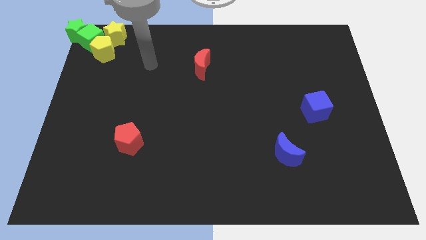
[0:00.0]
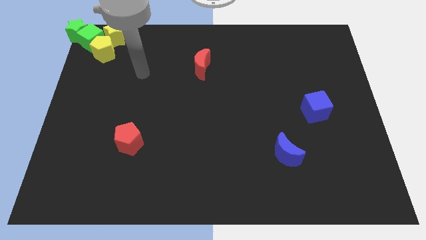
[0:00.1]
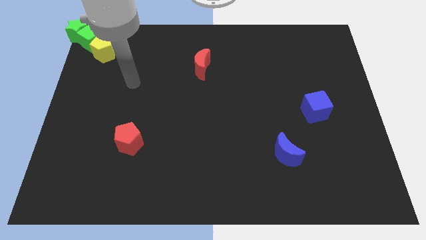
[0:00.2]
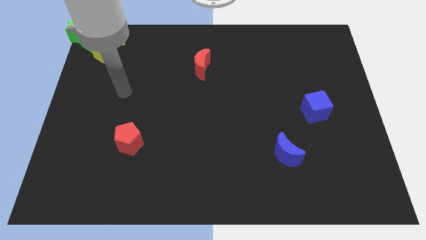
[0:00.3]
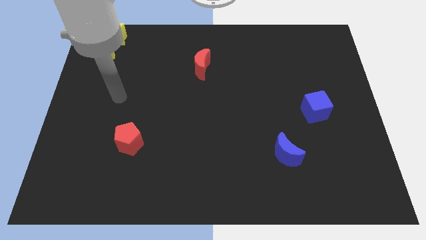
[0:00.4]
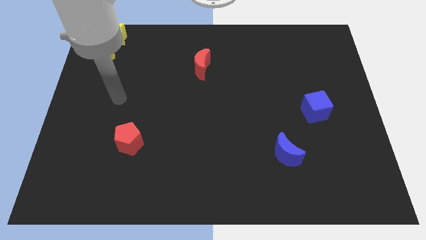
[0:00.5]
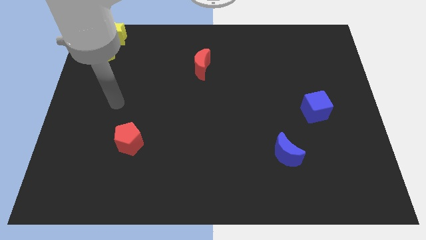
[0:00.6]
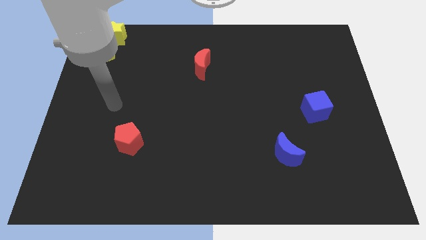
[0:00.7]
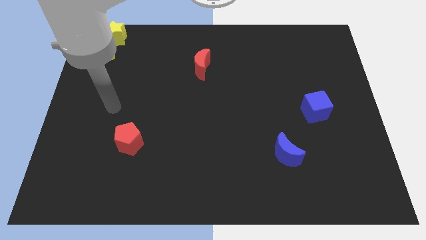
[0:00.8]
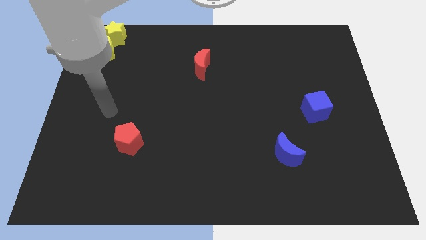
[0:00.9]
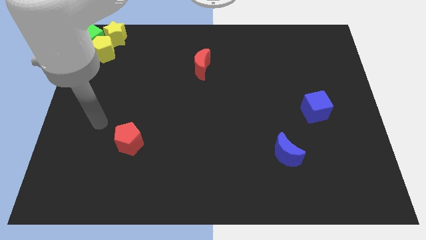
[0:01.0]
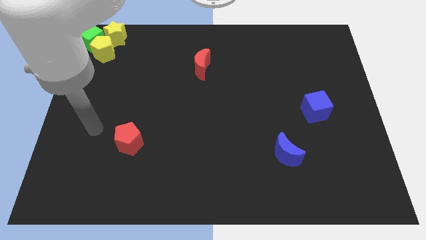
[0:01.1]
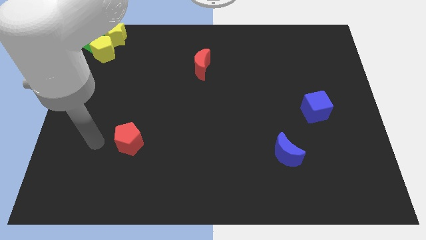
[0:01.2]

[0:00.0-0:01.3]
place your arm at the left side of the red pentagon

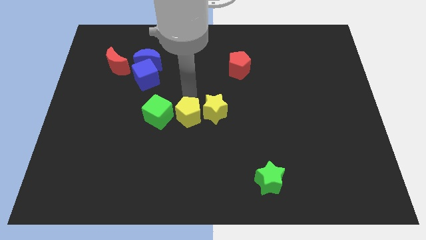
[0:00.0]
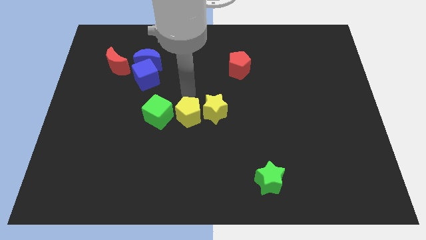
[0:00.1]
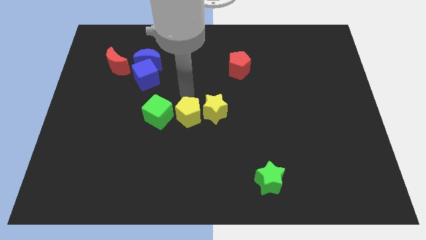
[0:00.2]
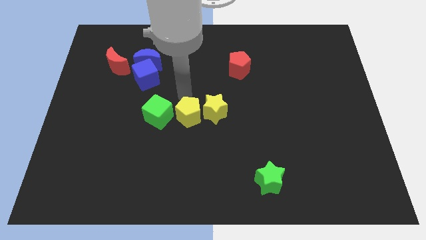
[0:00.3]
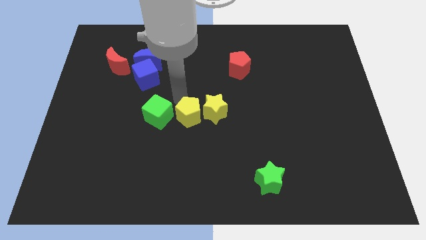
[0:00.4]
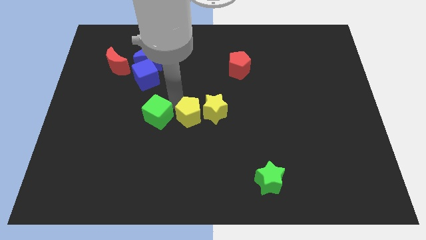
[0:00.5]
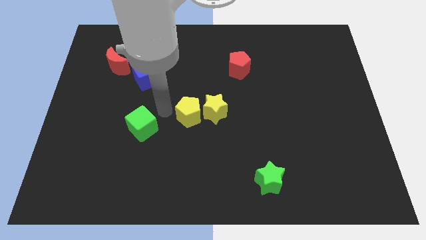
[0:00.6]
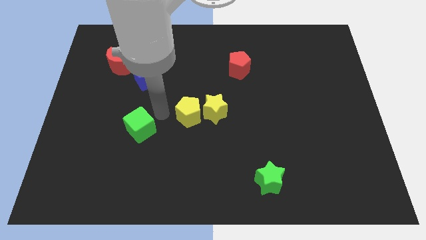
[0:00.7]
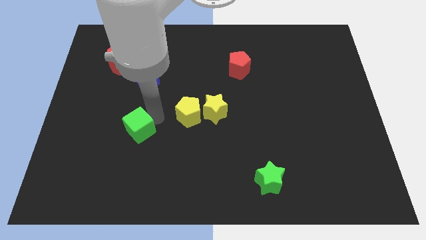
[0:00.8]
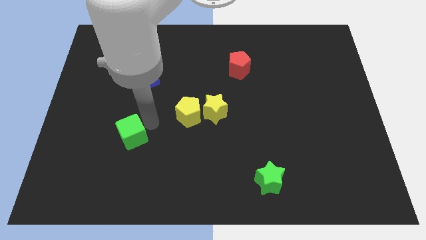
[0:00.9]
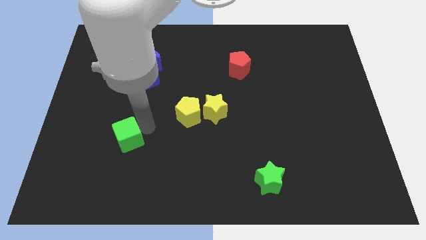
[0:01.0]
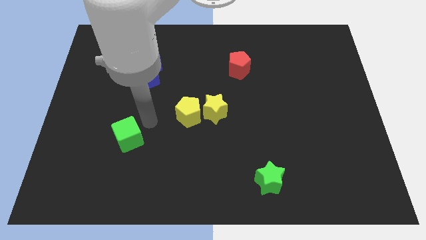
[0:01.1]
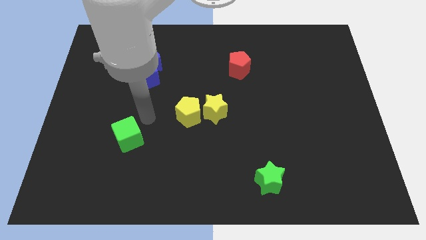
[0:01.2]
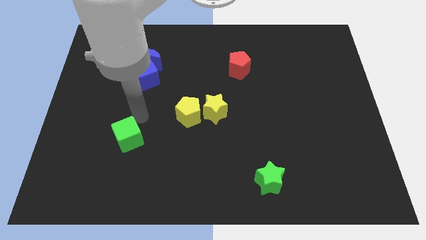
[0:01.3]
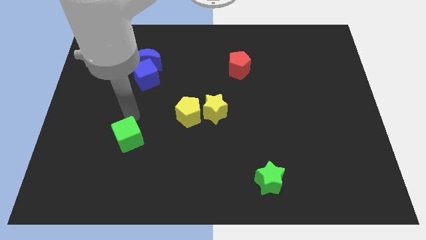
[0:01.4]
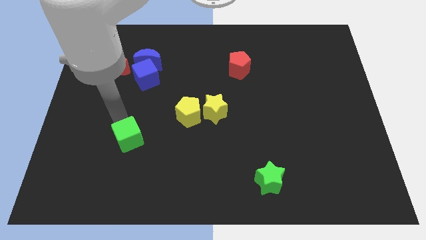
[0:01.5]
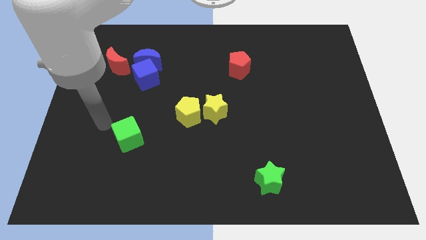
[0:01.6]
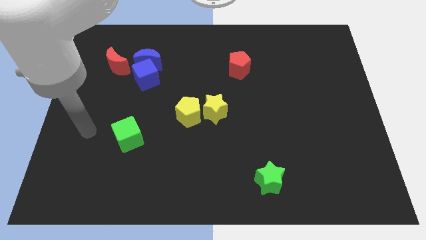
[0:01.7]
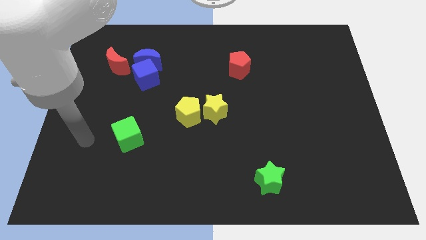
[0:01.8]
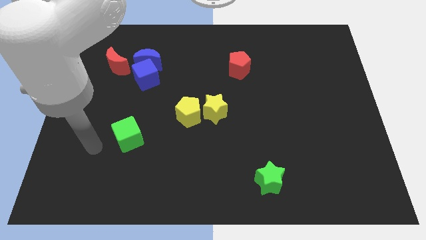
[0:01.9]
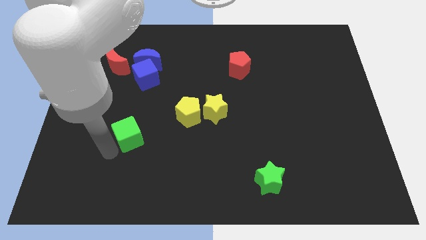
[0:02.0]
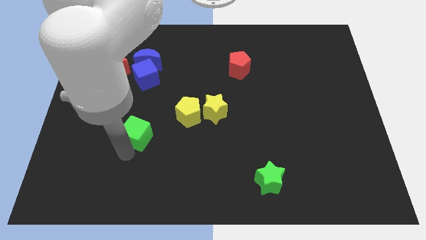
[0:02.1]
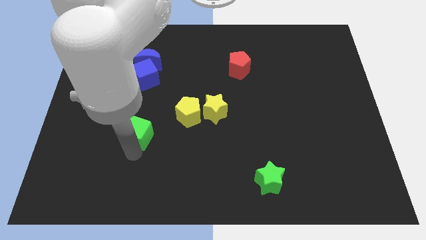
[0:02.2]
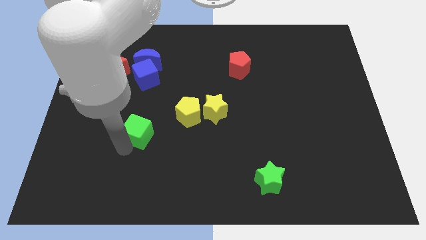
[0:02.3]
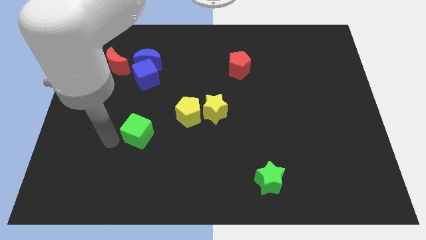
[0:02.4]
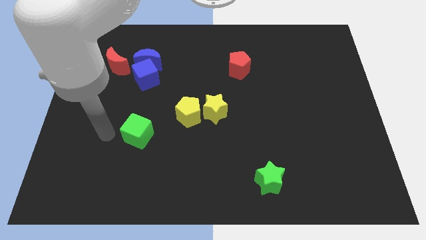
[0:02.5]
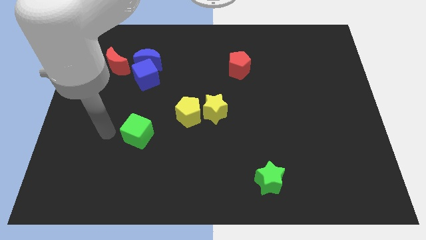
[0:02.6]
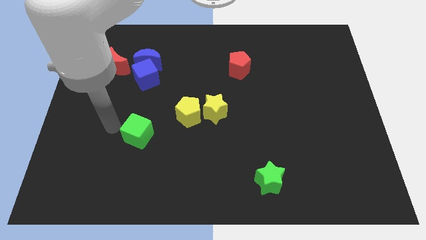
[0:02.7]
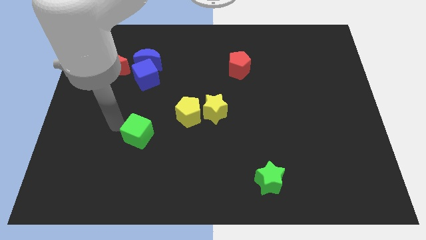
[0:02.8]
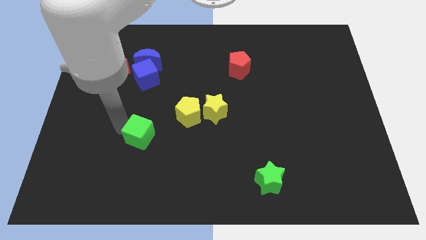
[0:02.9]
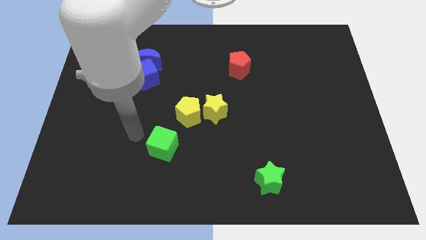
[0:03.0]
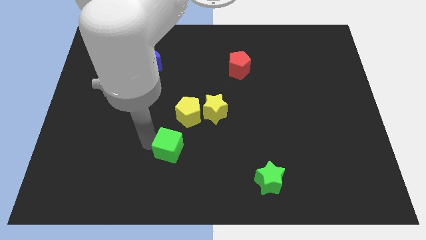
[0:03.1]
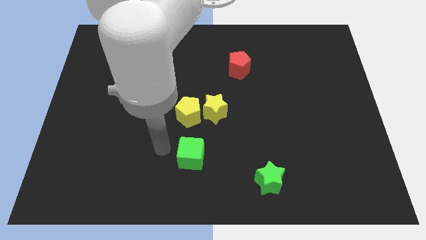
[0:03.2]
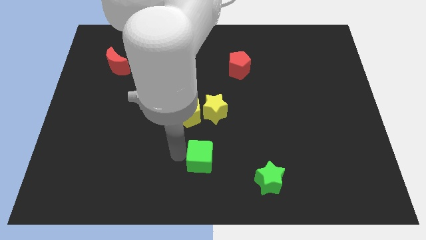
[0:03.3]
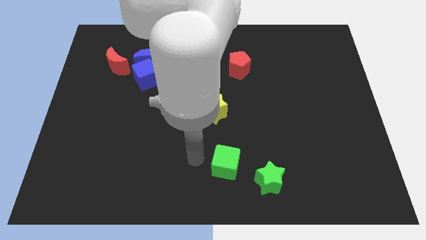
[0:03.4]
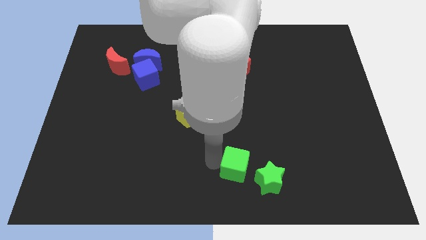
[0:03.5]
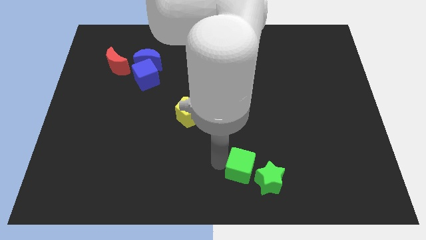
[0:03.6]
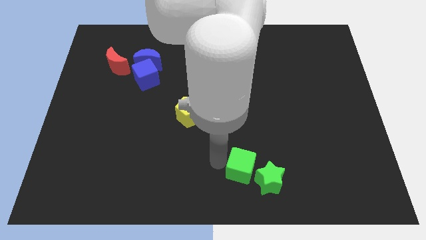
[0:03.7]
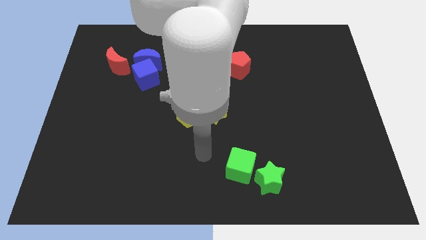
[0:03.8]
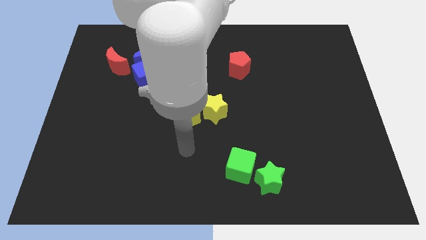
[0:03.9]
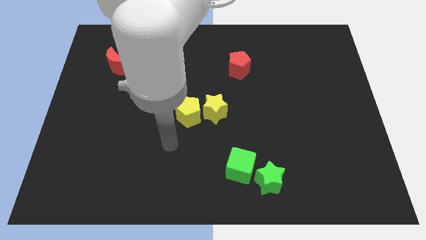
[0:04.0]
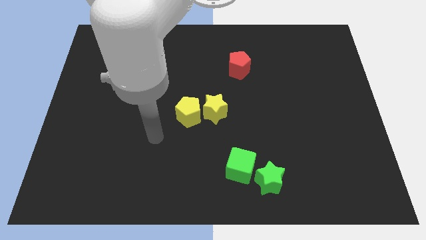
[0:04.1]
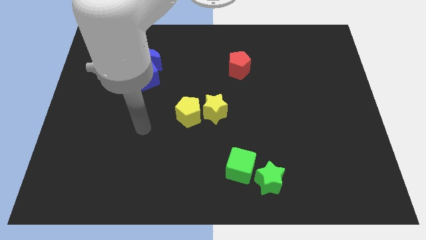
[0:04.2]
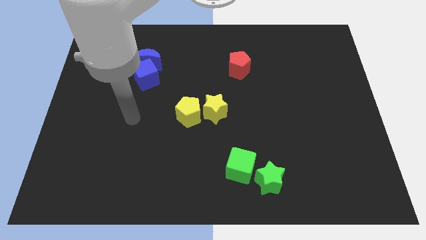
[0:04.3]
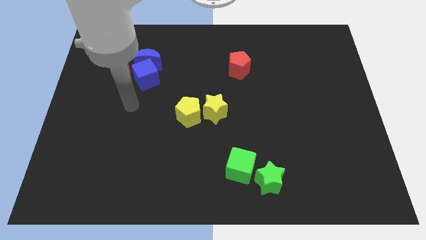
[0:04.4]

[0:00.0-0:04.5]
move the green cube diagonally towards the green star

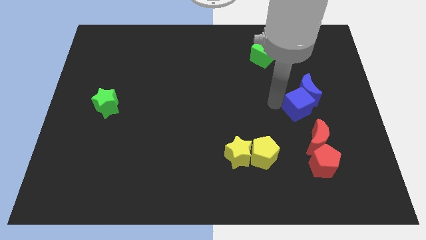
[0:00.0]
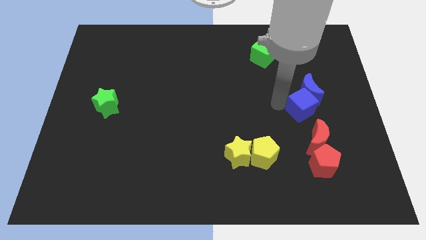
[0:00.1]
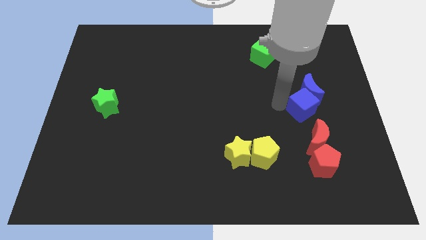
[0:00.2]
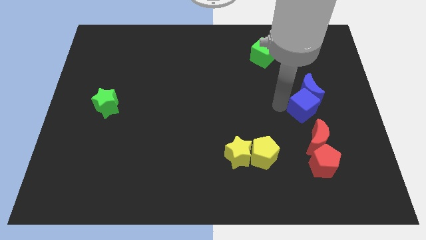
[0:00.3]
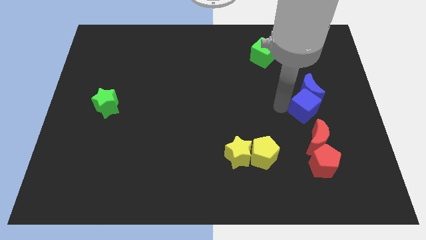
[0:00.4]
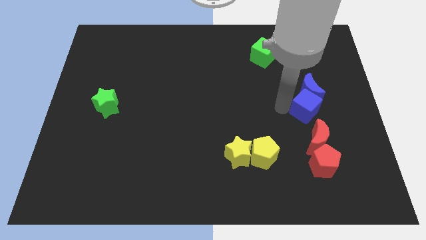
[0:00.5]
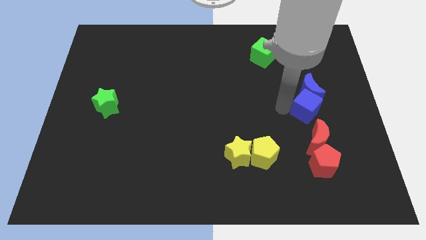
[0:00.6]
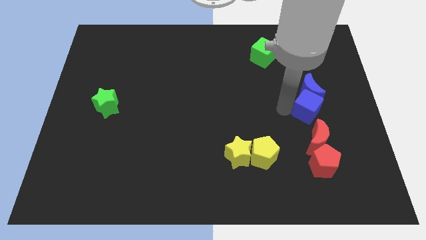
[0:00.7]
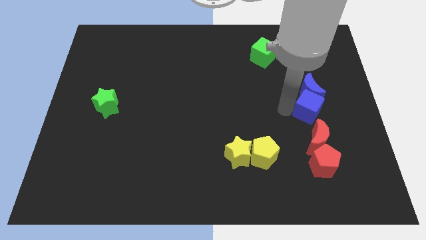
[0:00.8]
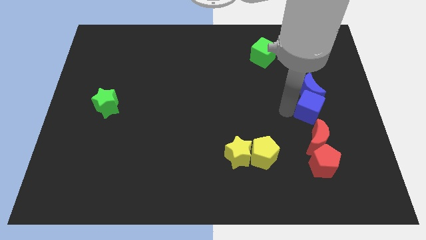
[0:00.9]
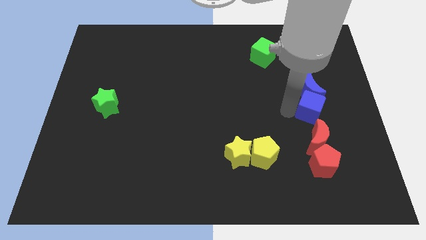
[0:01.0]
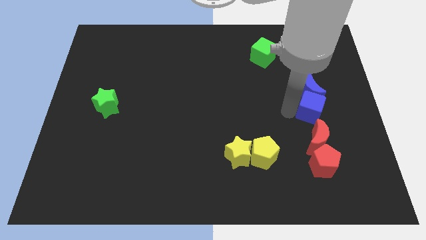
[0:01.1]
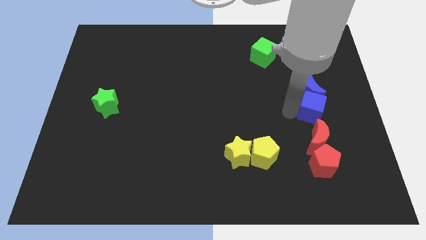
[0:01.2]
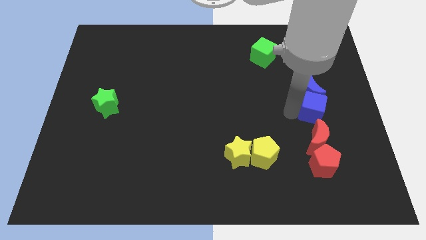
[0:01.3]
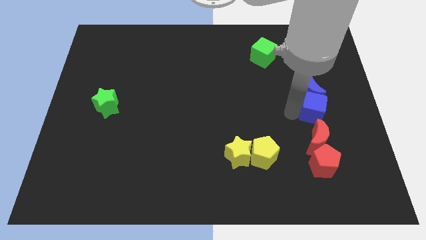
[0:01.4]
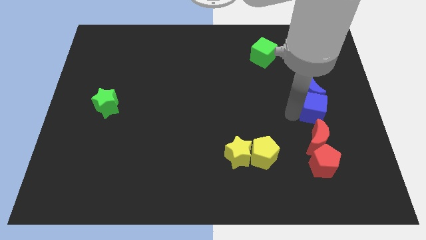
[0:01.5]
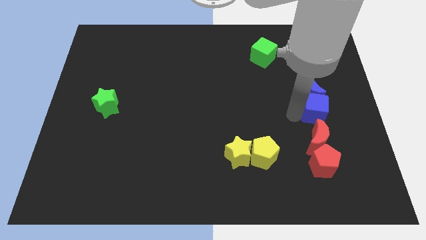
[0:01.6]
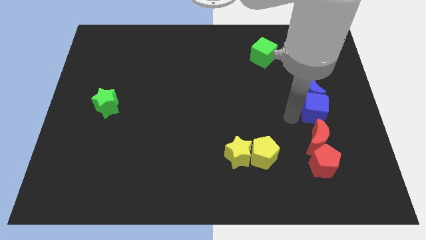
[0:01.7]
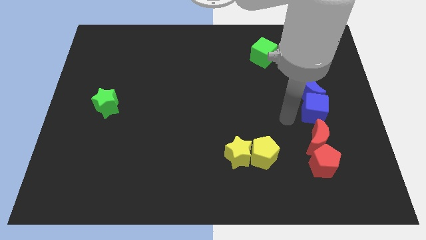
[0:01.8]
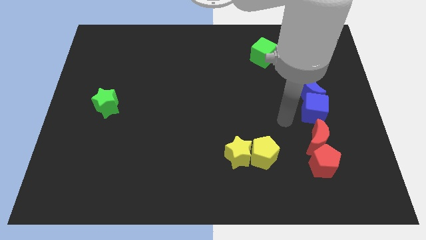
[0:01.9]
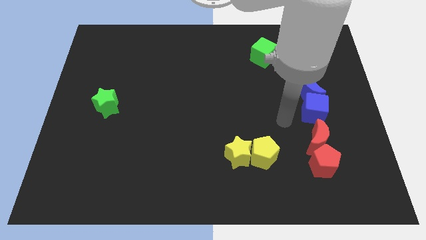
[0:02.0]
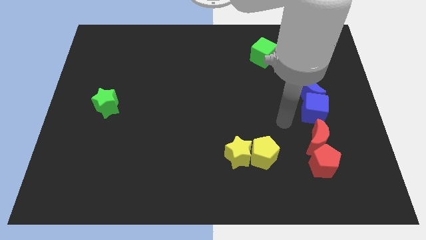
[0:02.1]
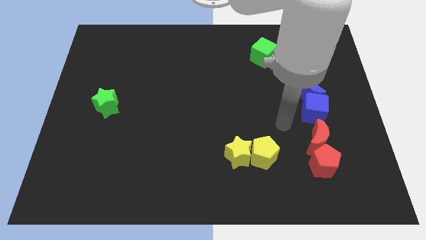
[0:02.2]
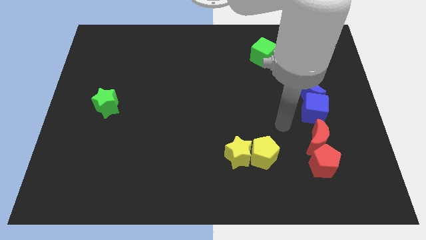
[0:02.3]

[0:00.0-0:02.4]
slightly move the blue cube towards down to the blue crescent

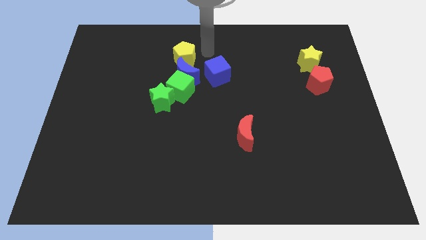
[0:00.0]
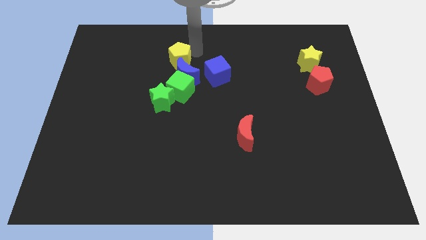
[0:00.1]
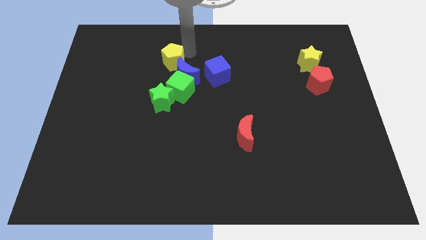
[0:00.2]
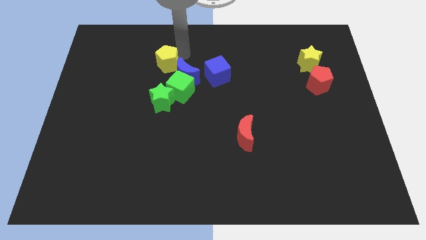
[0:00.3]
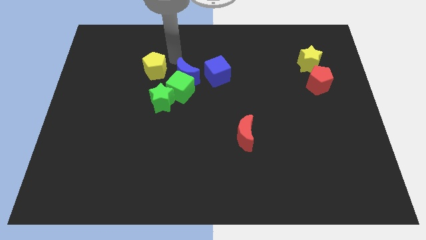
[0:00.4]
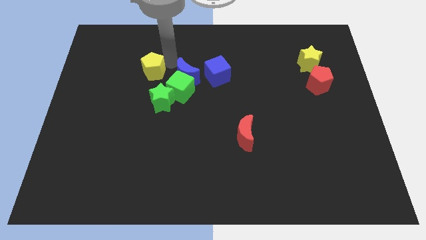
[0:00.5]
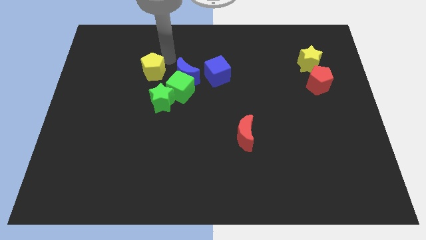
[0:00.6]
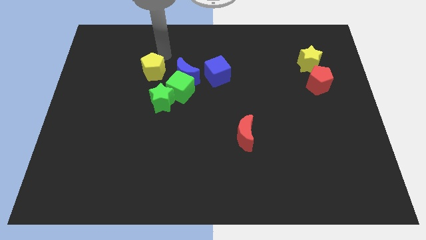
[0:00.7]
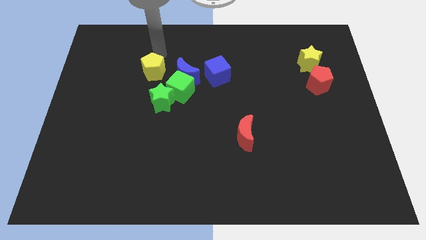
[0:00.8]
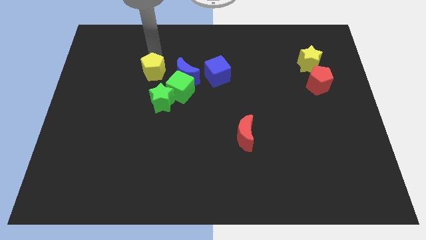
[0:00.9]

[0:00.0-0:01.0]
push the yellow pentagon diagonally down
